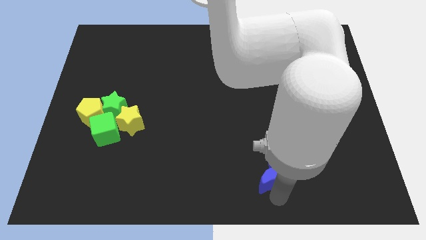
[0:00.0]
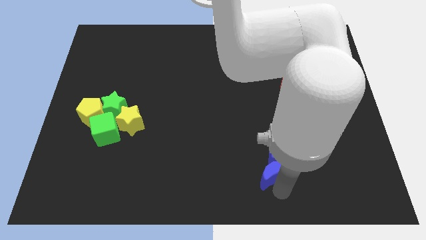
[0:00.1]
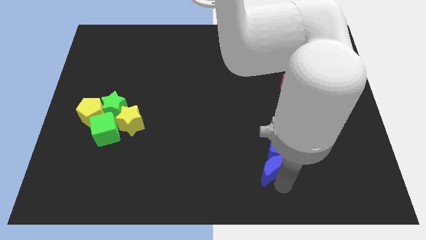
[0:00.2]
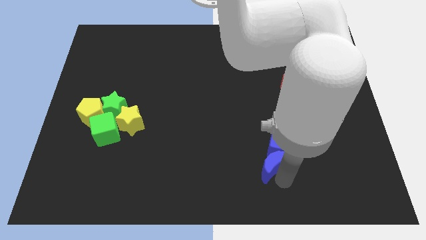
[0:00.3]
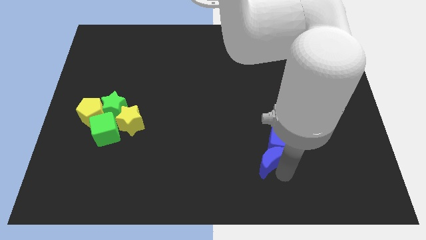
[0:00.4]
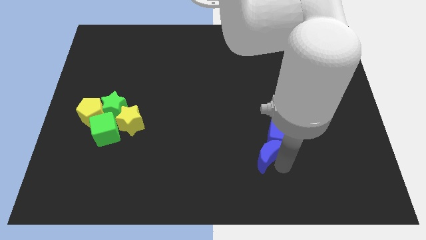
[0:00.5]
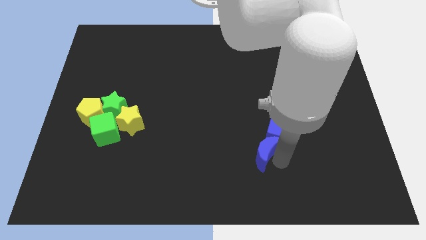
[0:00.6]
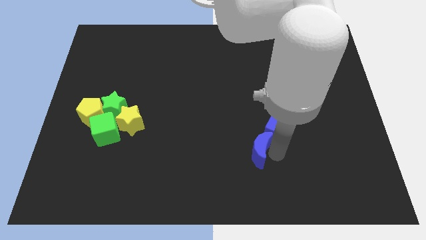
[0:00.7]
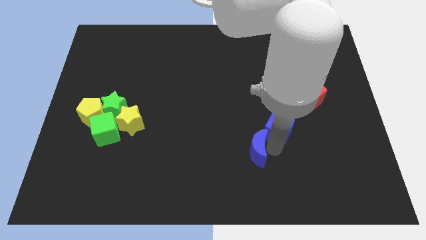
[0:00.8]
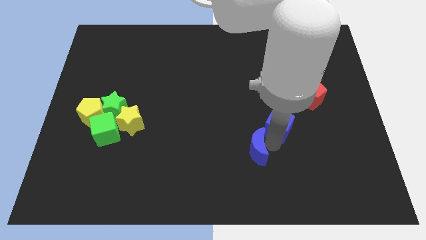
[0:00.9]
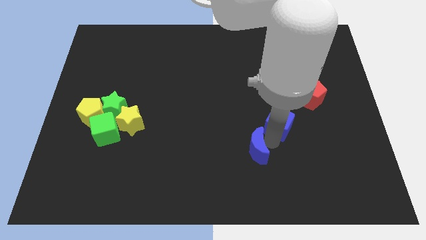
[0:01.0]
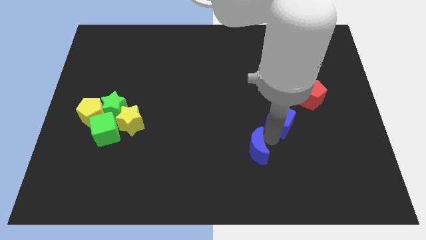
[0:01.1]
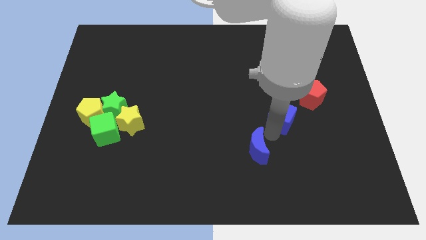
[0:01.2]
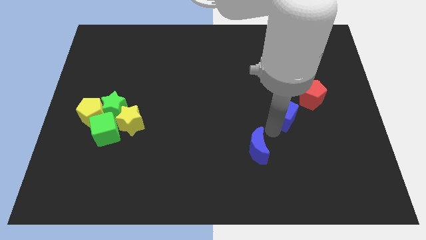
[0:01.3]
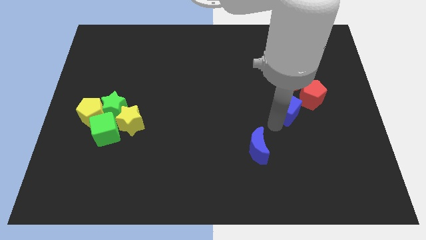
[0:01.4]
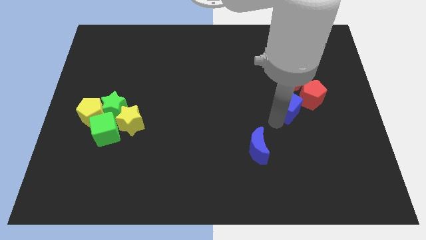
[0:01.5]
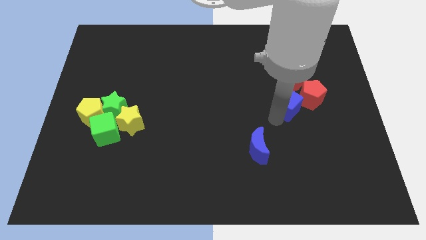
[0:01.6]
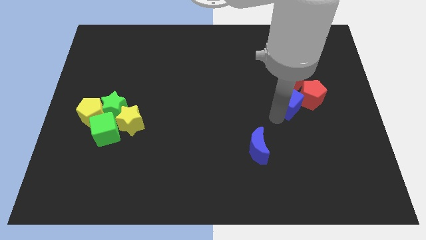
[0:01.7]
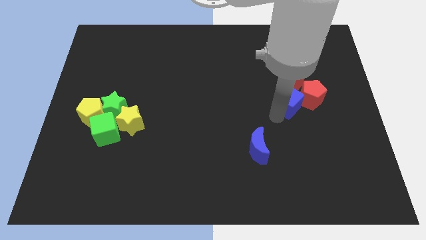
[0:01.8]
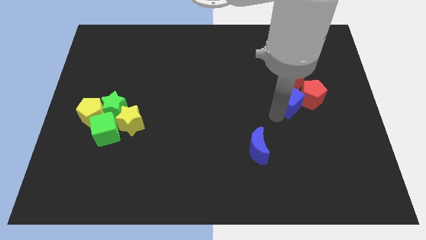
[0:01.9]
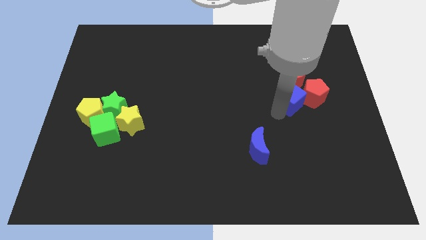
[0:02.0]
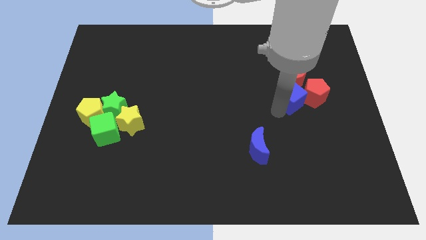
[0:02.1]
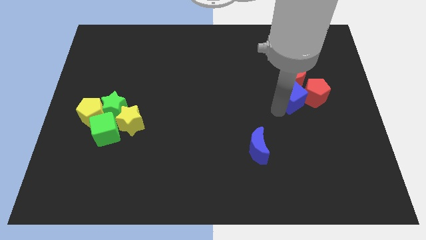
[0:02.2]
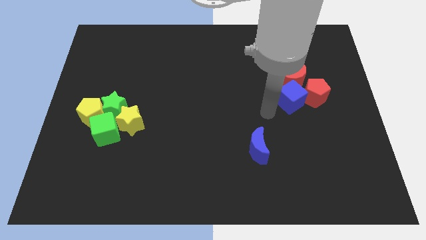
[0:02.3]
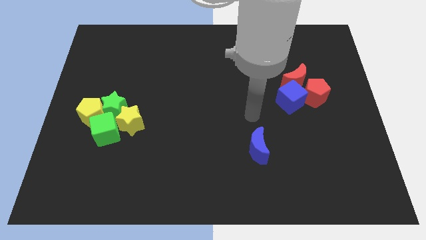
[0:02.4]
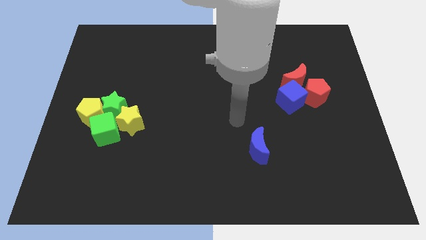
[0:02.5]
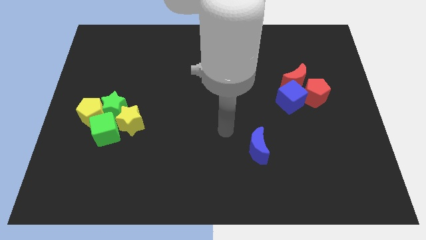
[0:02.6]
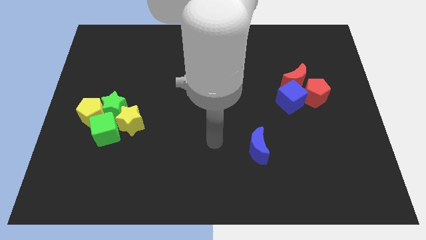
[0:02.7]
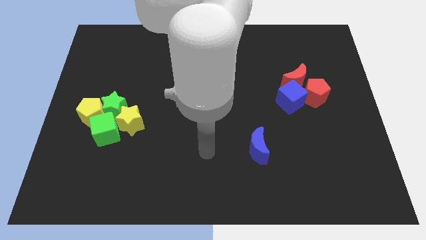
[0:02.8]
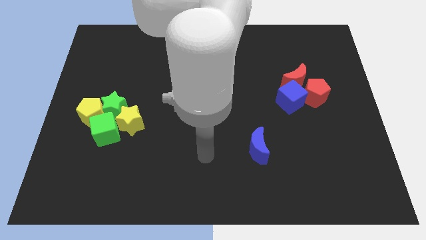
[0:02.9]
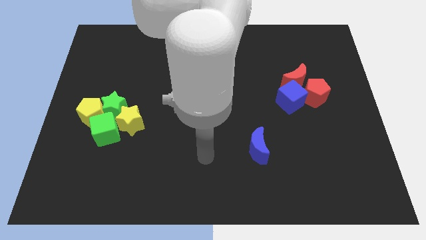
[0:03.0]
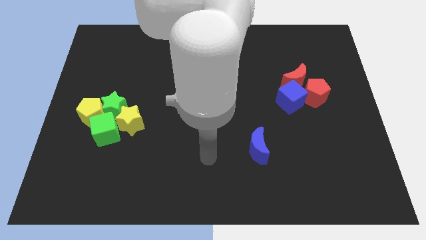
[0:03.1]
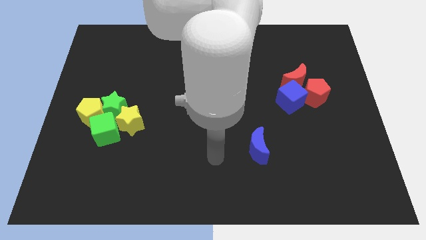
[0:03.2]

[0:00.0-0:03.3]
move the blue cube into the group of red block to make a triangle

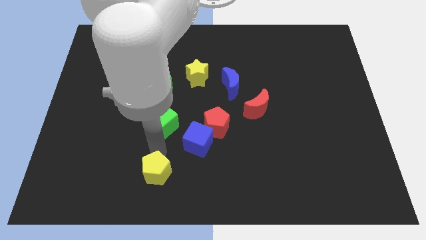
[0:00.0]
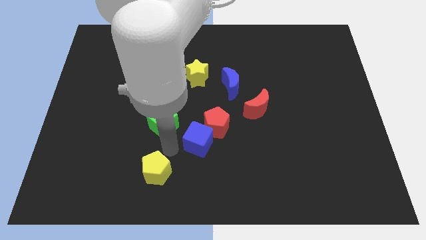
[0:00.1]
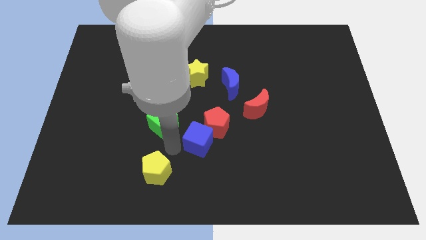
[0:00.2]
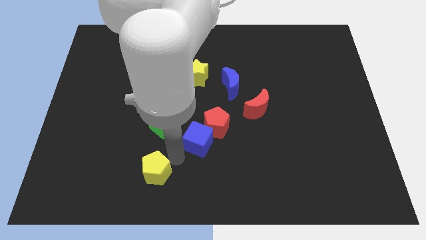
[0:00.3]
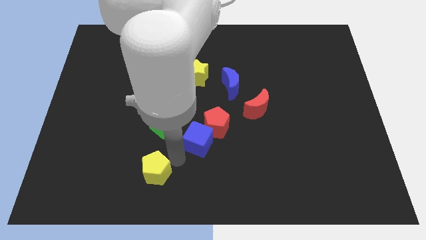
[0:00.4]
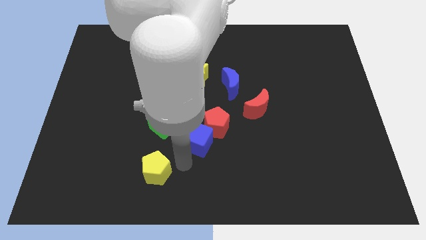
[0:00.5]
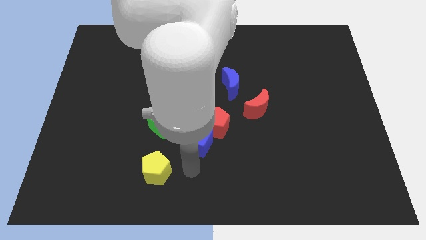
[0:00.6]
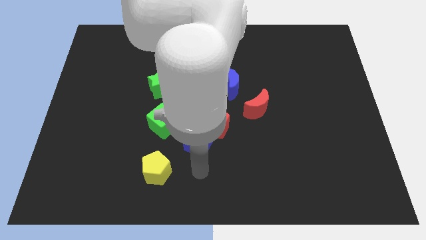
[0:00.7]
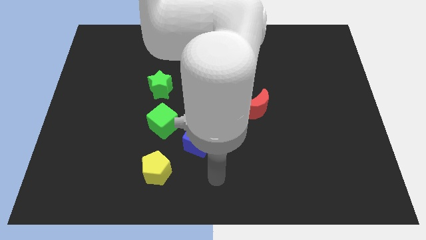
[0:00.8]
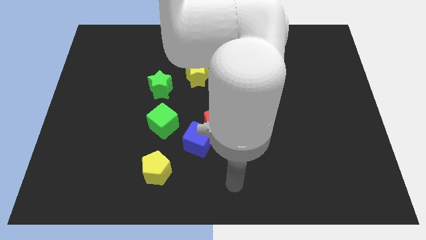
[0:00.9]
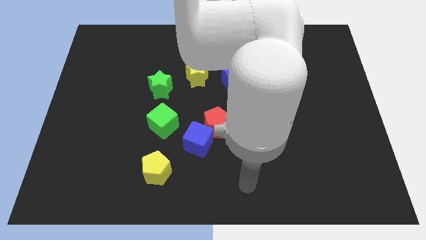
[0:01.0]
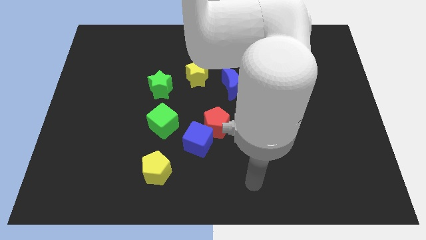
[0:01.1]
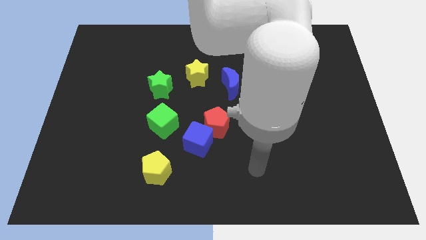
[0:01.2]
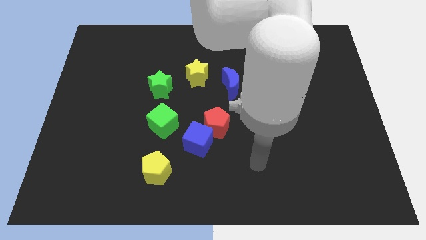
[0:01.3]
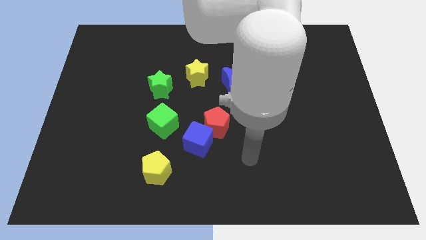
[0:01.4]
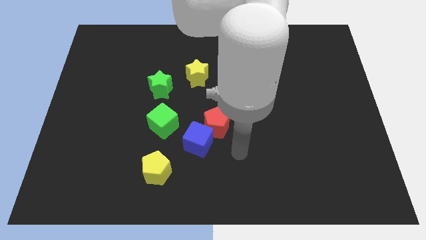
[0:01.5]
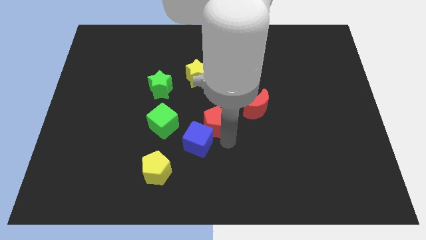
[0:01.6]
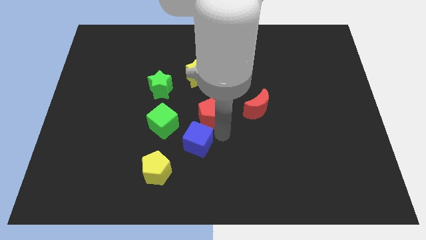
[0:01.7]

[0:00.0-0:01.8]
move your arm towards the bottom of the red pentagon

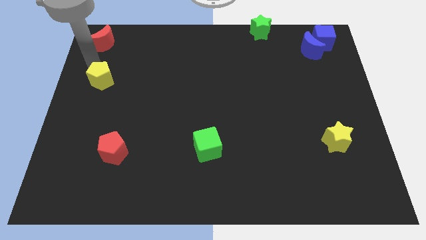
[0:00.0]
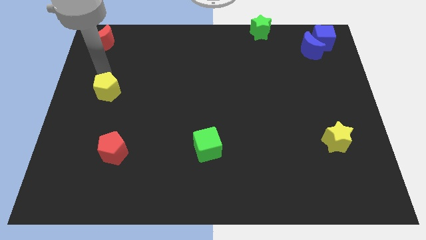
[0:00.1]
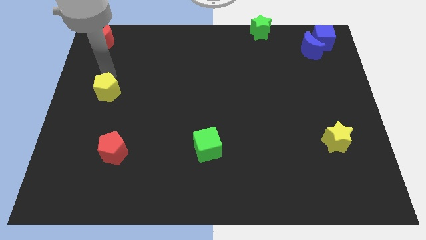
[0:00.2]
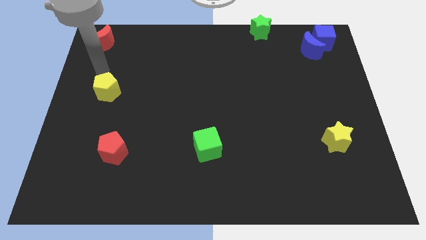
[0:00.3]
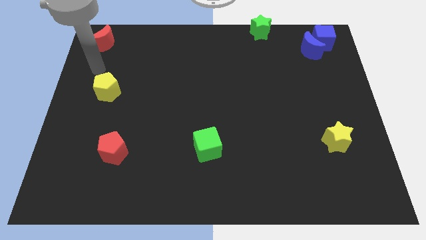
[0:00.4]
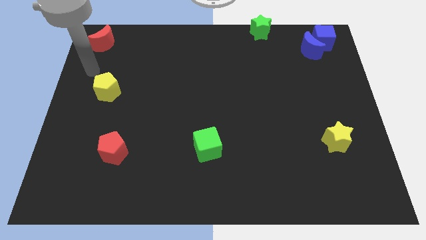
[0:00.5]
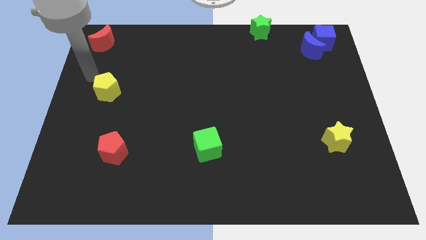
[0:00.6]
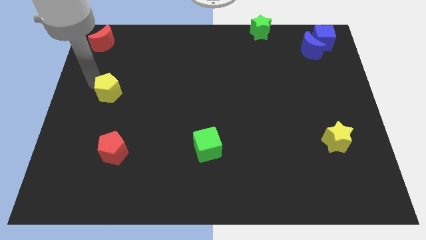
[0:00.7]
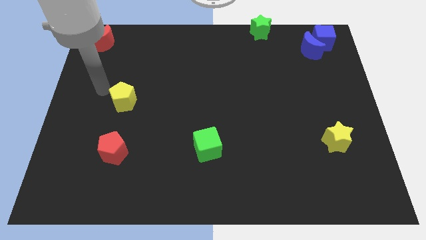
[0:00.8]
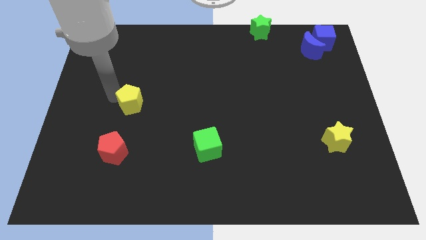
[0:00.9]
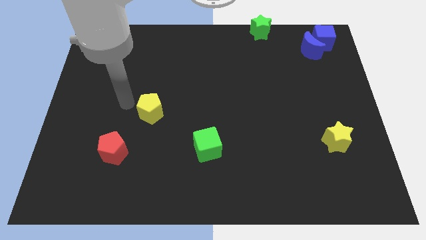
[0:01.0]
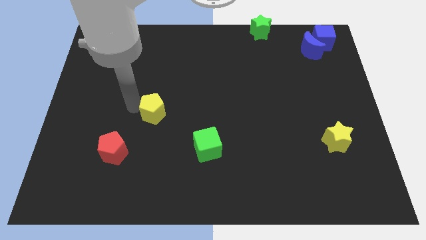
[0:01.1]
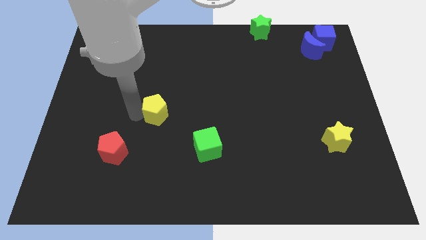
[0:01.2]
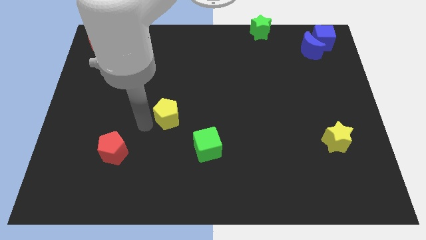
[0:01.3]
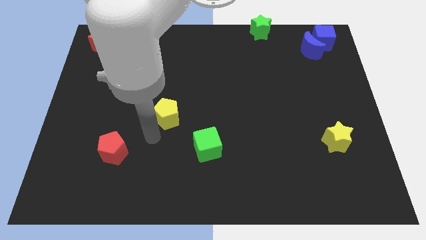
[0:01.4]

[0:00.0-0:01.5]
push the yellow pentagon towards the top left side of the green cube

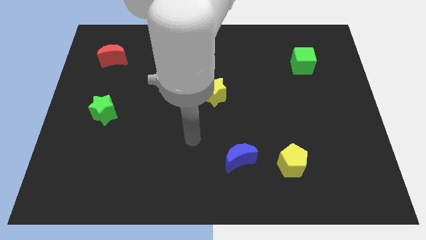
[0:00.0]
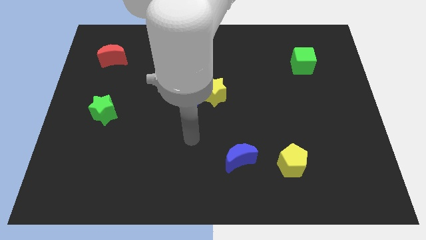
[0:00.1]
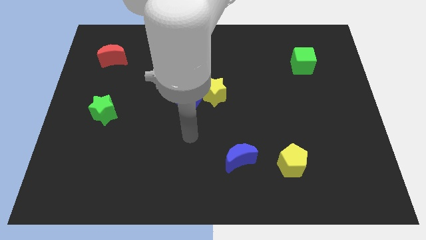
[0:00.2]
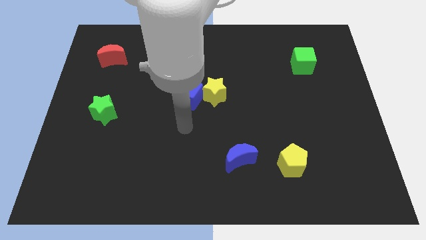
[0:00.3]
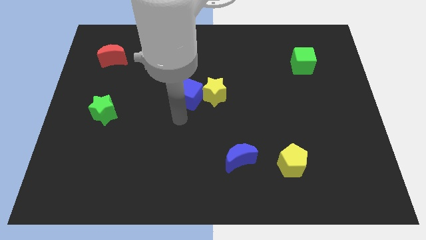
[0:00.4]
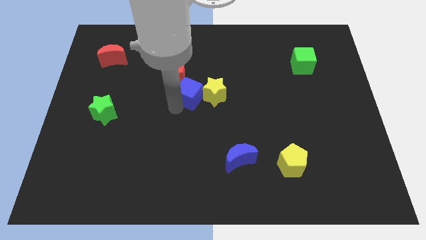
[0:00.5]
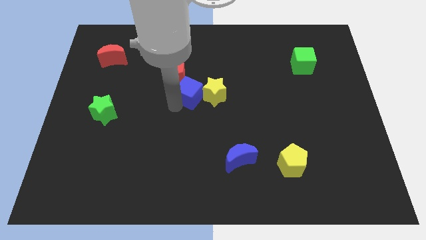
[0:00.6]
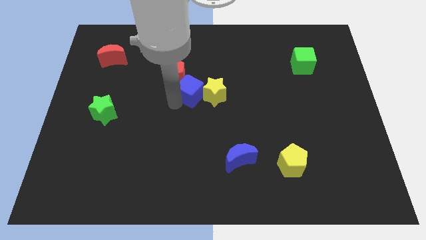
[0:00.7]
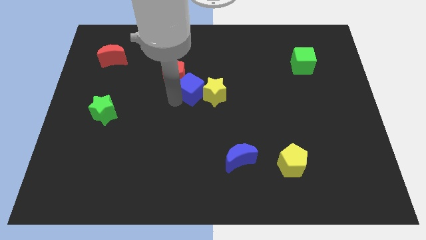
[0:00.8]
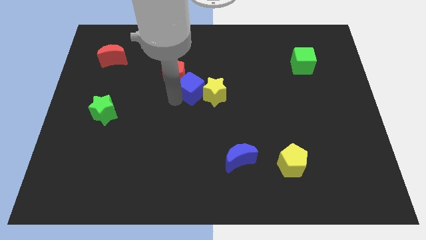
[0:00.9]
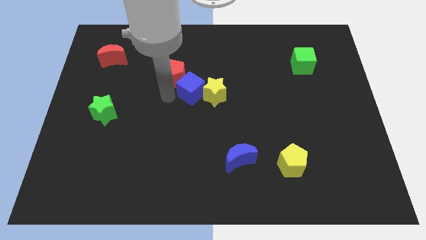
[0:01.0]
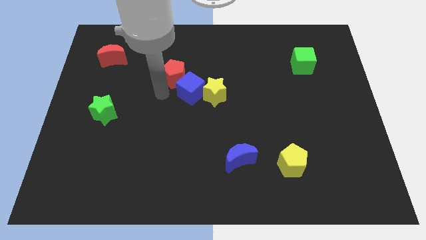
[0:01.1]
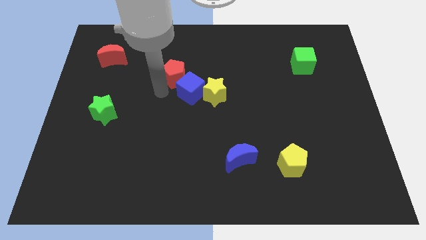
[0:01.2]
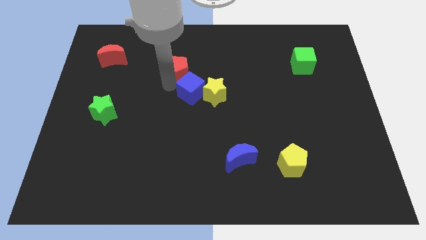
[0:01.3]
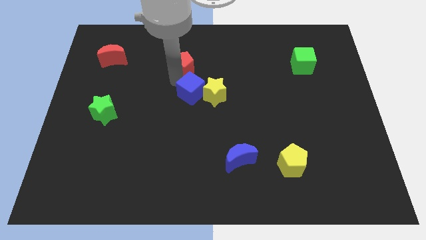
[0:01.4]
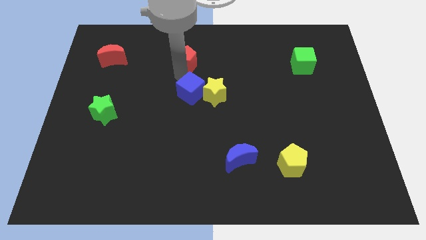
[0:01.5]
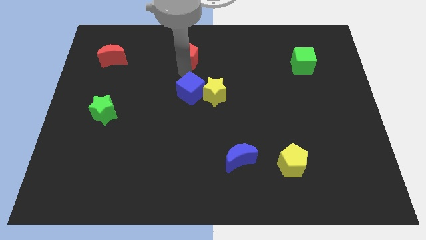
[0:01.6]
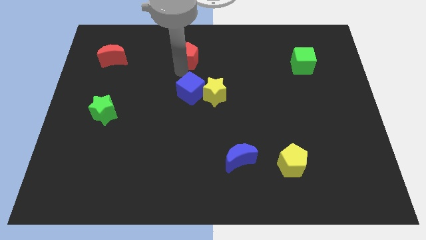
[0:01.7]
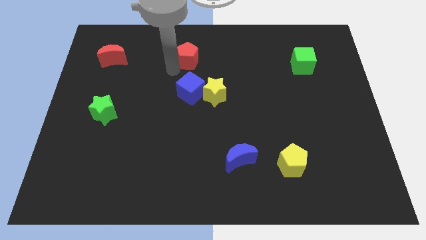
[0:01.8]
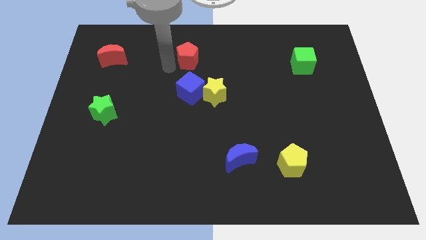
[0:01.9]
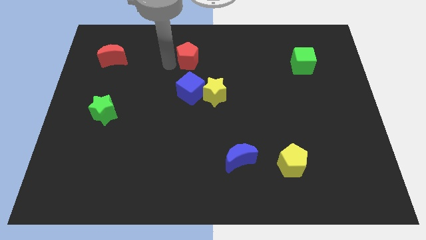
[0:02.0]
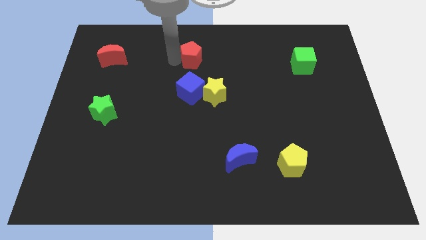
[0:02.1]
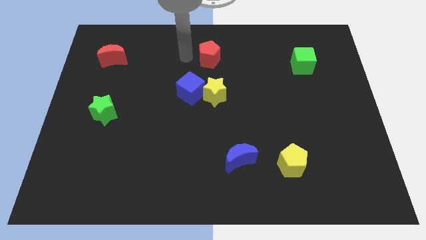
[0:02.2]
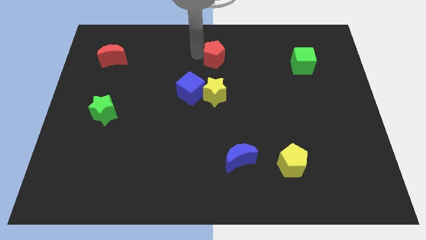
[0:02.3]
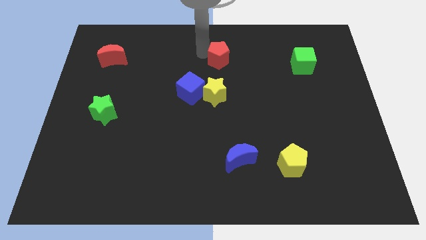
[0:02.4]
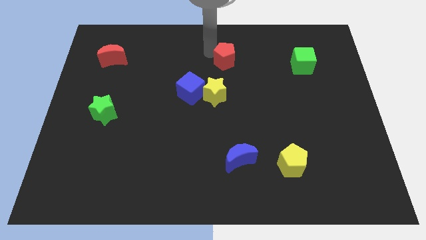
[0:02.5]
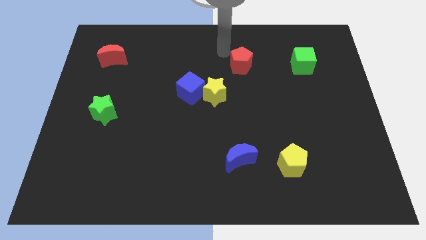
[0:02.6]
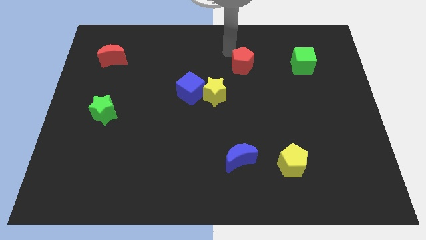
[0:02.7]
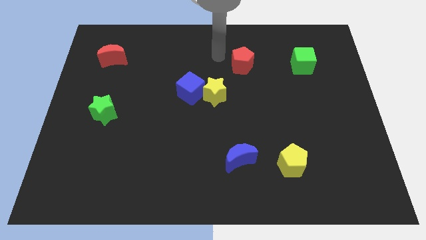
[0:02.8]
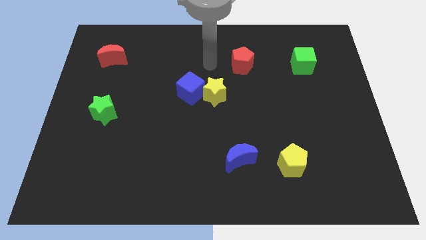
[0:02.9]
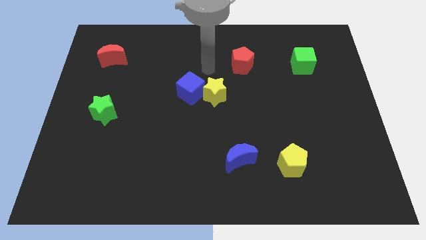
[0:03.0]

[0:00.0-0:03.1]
move the red pentagon at the top right side of the yellow star
